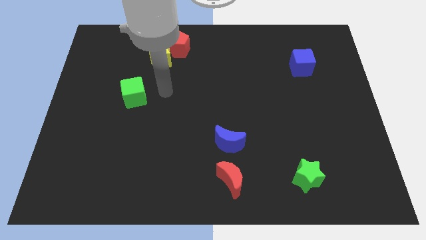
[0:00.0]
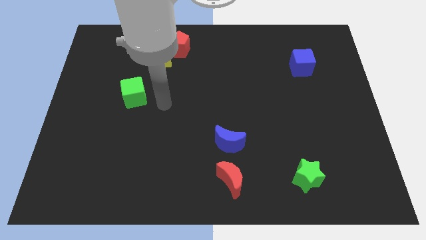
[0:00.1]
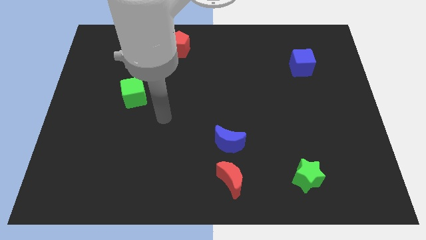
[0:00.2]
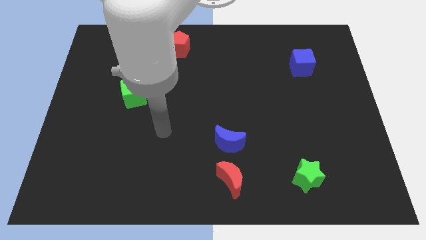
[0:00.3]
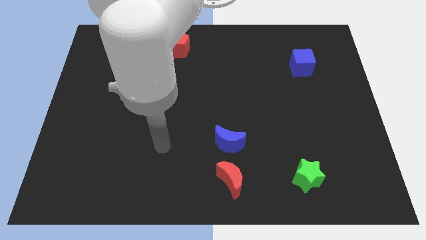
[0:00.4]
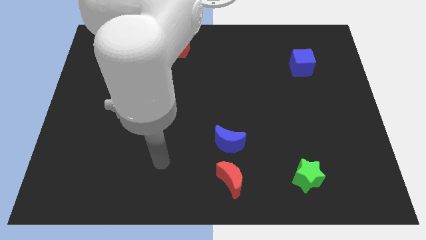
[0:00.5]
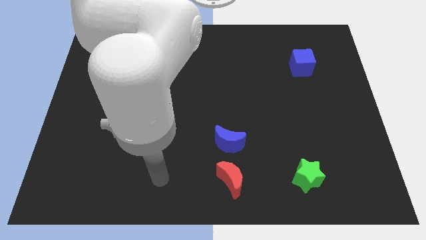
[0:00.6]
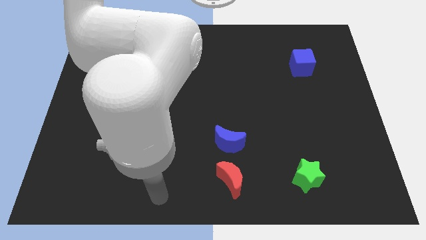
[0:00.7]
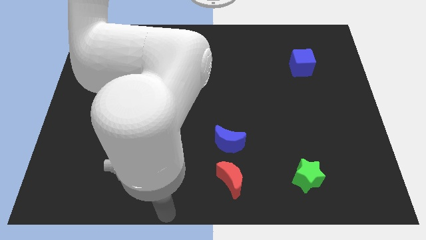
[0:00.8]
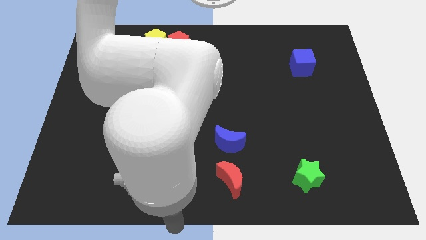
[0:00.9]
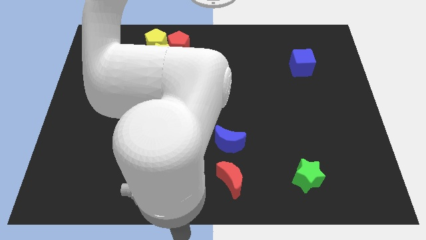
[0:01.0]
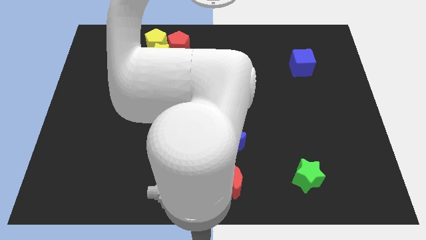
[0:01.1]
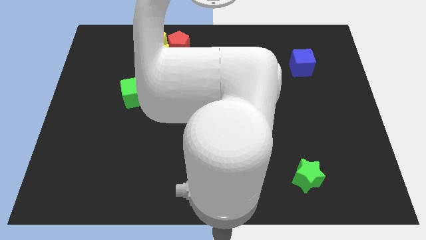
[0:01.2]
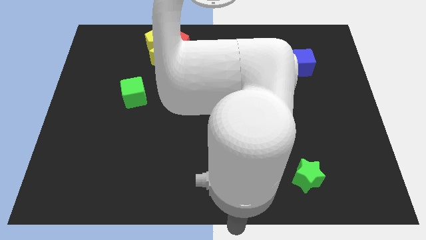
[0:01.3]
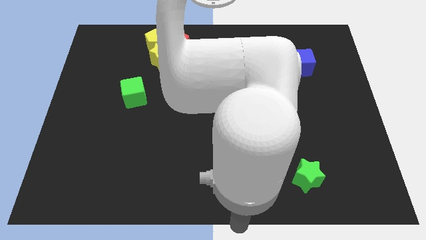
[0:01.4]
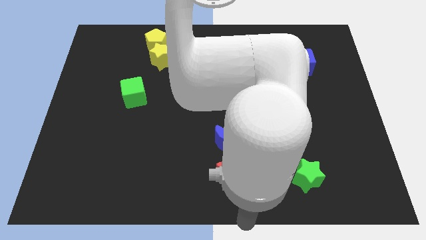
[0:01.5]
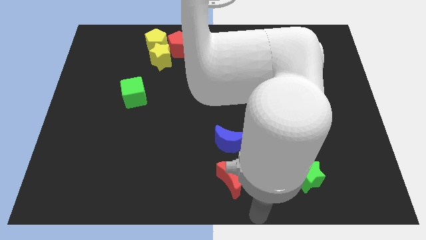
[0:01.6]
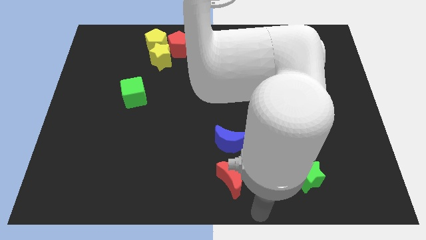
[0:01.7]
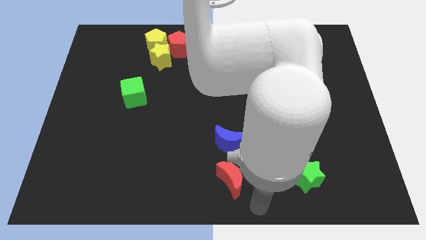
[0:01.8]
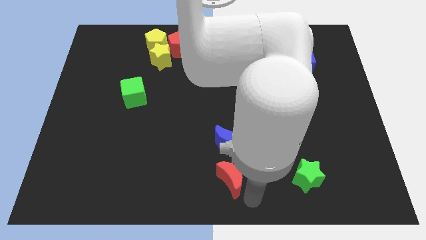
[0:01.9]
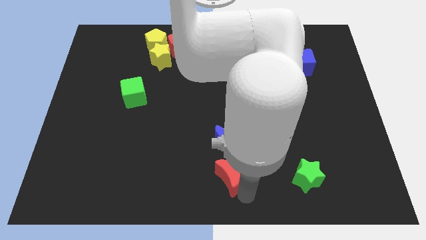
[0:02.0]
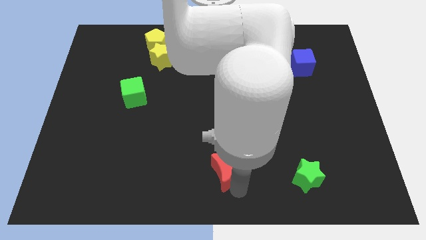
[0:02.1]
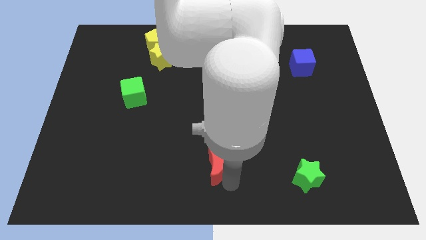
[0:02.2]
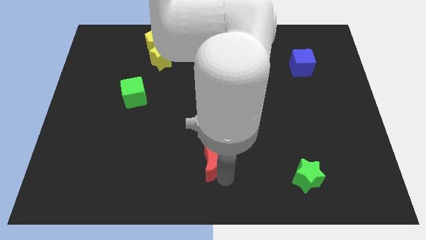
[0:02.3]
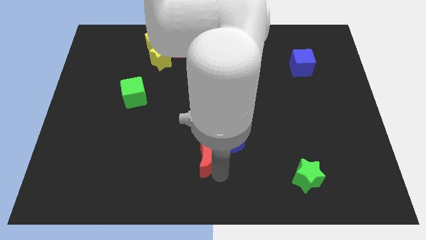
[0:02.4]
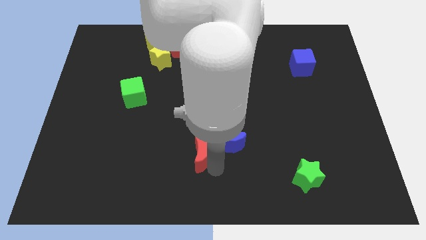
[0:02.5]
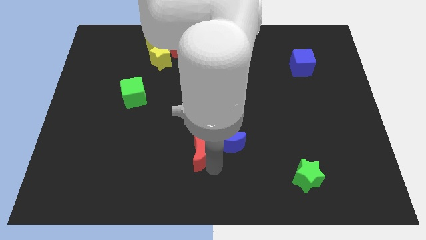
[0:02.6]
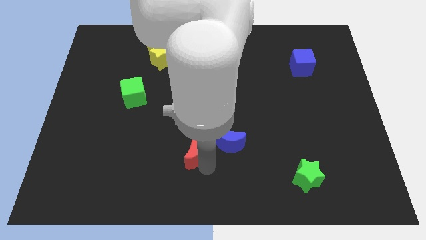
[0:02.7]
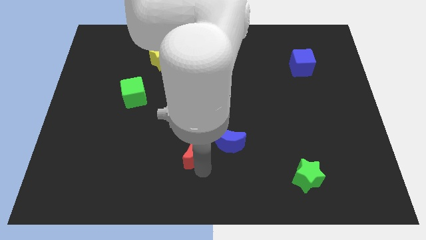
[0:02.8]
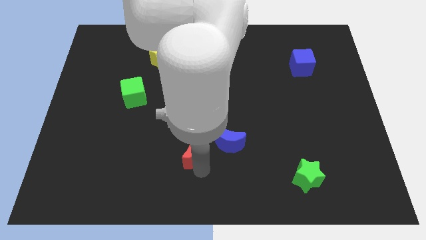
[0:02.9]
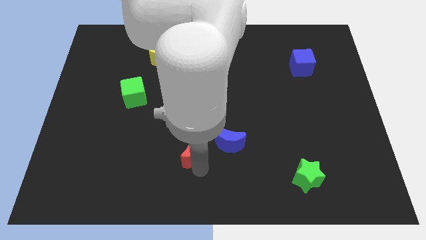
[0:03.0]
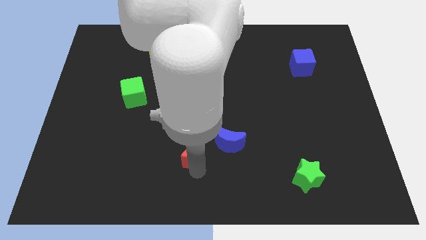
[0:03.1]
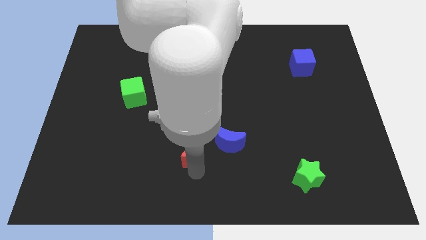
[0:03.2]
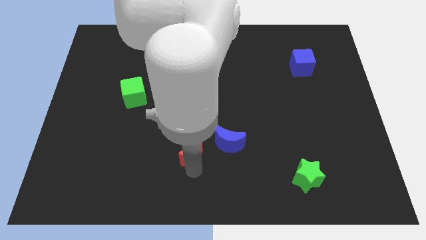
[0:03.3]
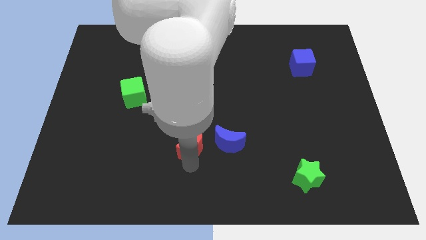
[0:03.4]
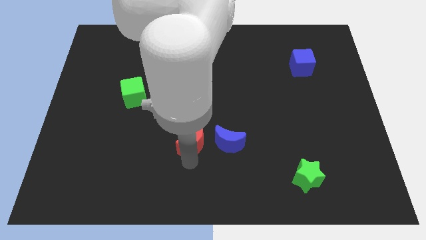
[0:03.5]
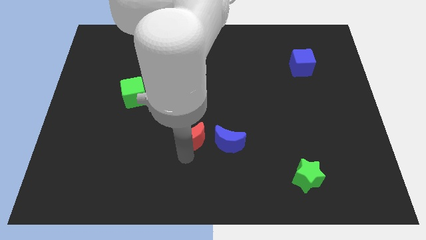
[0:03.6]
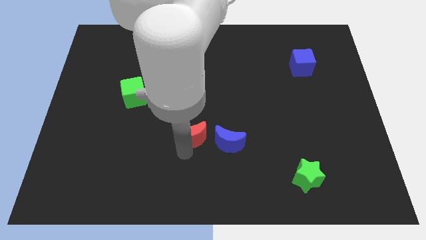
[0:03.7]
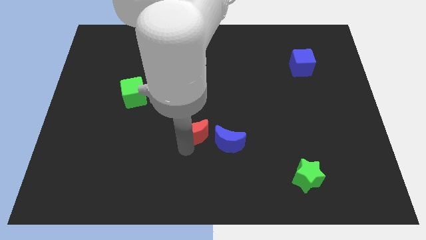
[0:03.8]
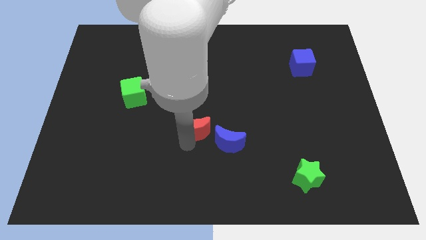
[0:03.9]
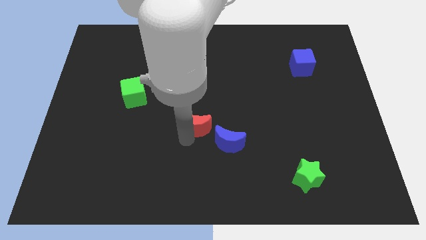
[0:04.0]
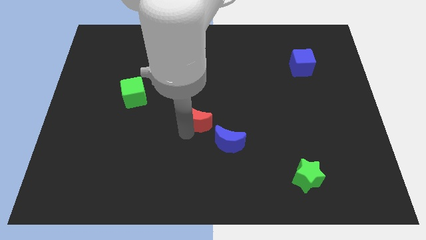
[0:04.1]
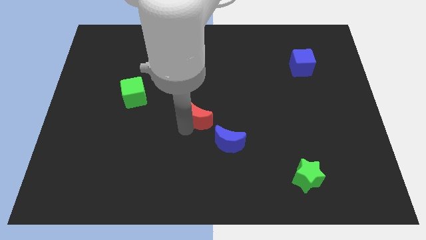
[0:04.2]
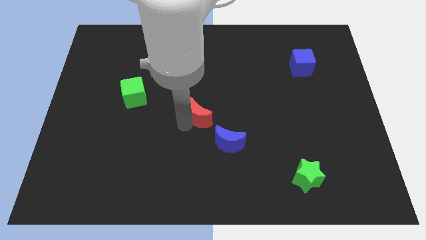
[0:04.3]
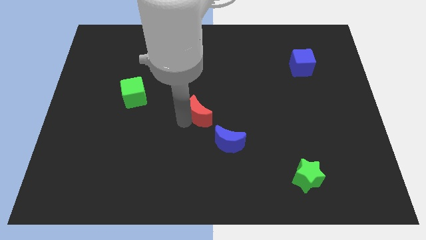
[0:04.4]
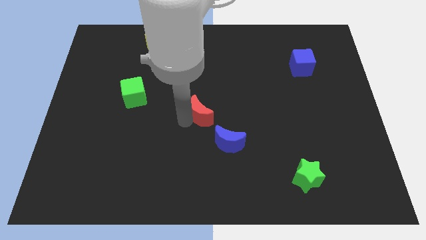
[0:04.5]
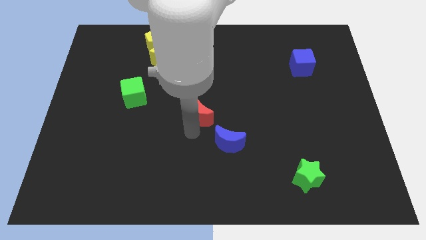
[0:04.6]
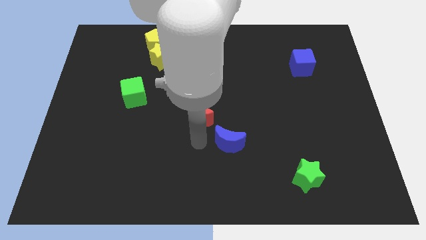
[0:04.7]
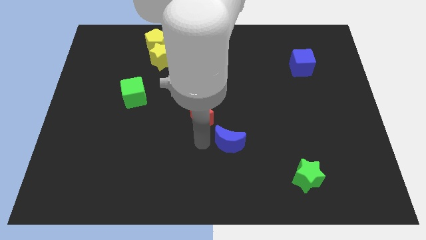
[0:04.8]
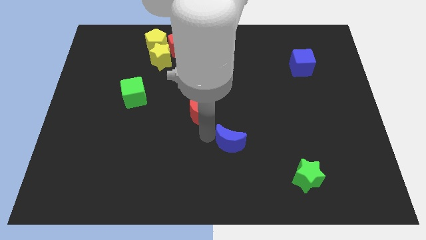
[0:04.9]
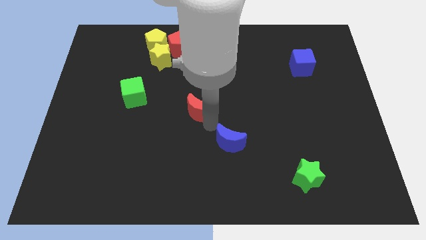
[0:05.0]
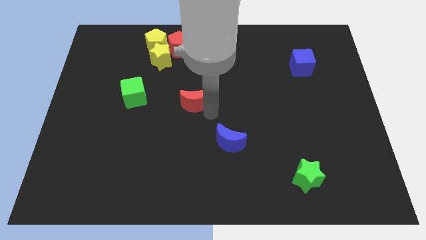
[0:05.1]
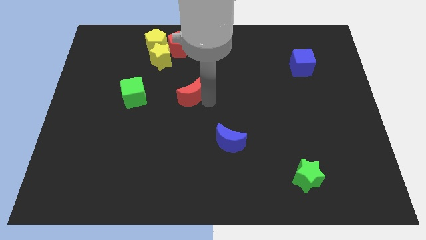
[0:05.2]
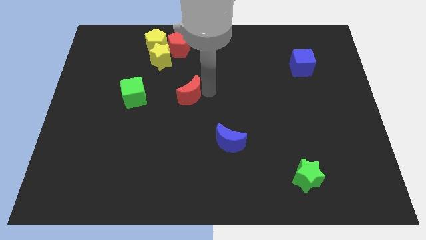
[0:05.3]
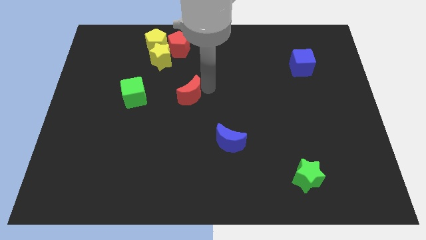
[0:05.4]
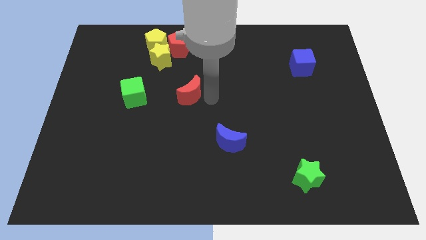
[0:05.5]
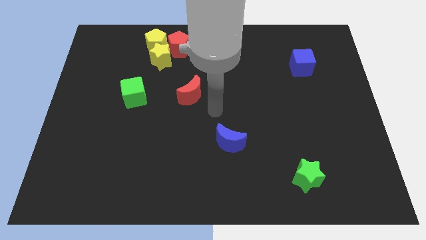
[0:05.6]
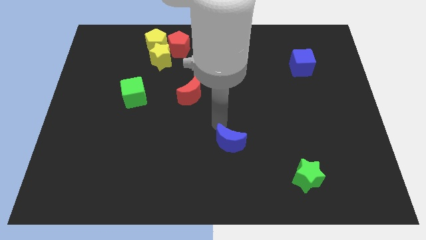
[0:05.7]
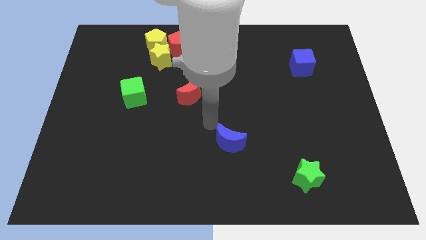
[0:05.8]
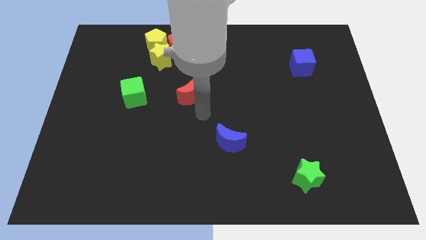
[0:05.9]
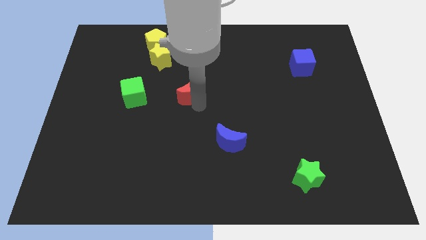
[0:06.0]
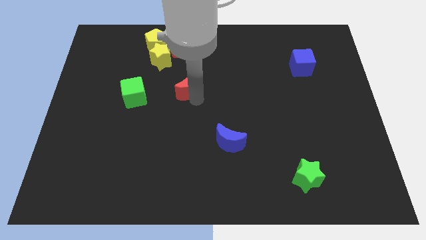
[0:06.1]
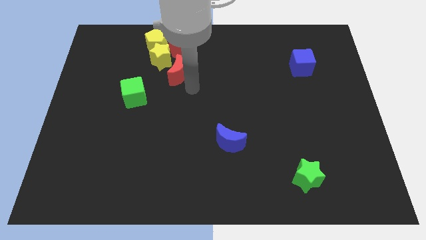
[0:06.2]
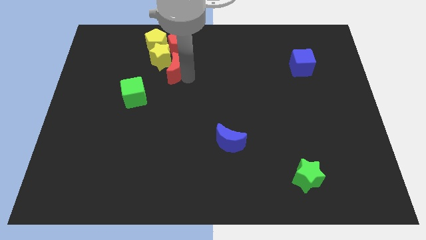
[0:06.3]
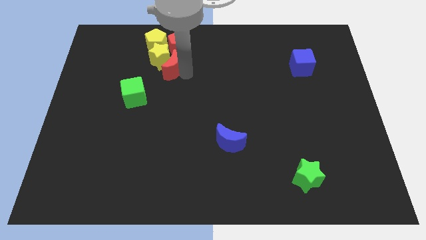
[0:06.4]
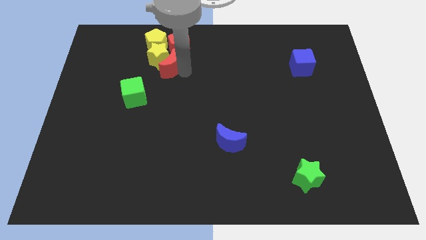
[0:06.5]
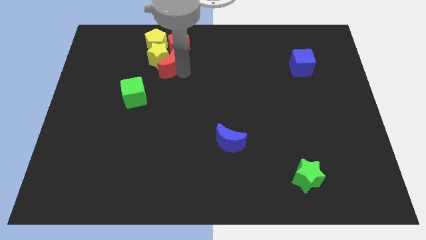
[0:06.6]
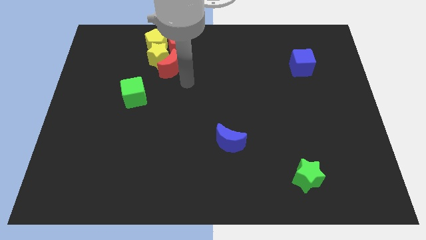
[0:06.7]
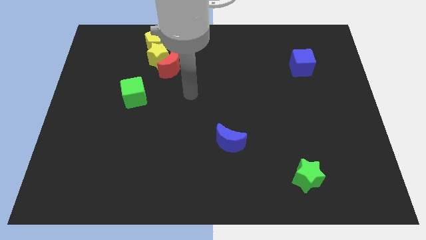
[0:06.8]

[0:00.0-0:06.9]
move the red crescent to the top of the board

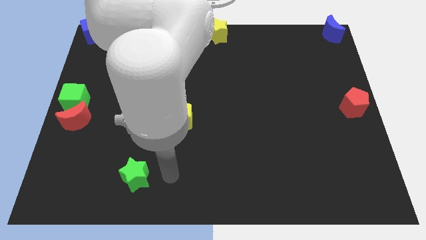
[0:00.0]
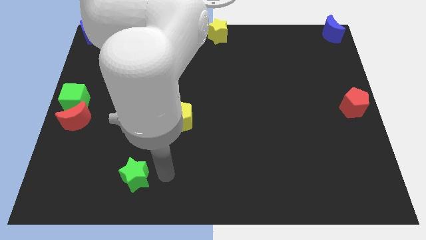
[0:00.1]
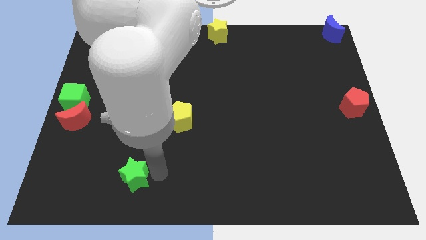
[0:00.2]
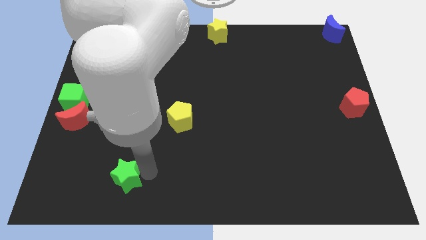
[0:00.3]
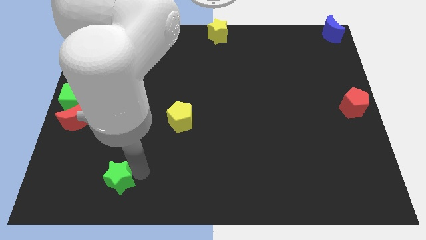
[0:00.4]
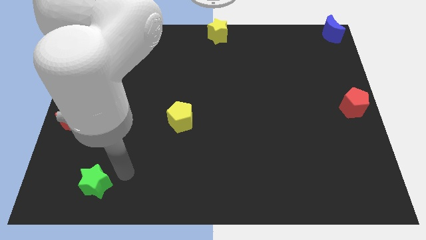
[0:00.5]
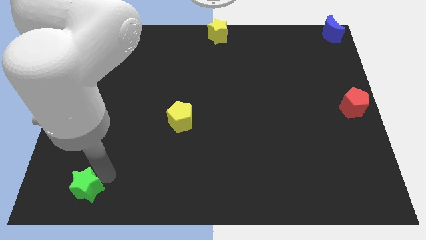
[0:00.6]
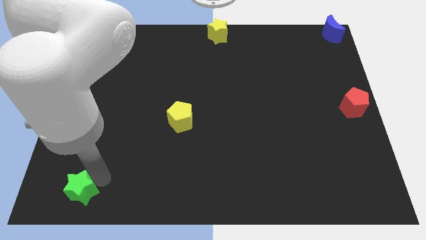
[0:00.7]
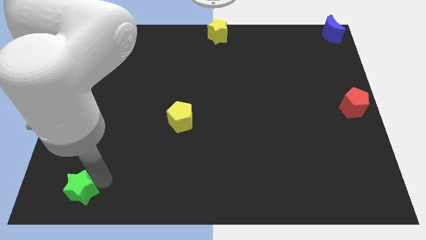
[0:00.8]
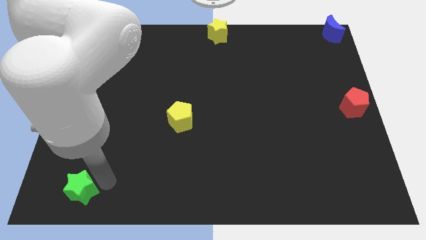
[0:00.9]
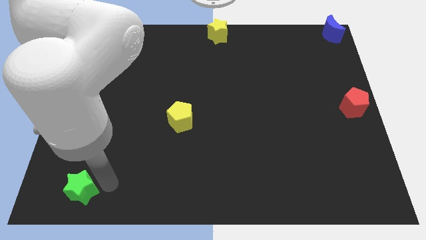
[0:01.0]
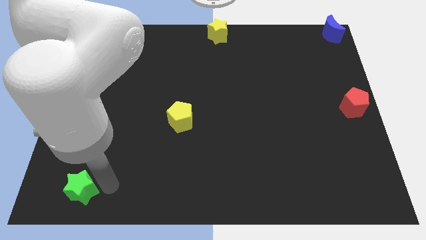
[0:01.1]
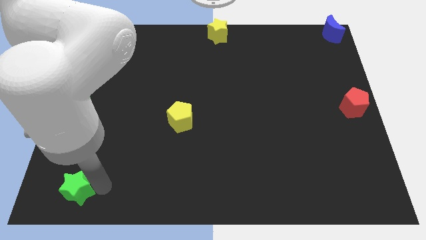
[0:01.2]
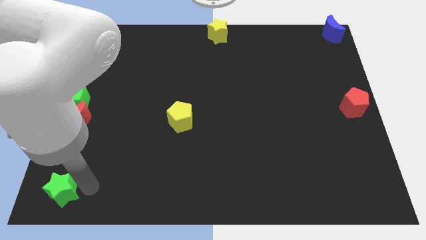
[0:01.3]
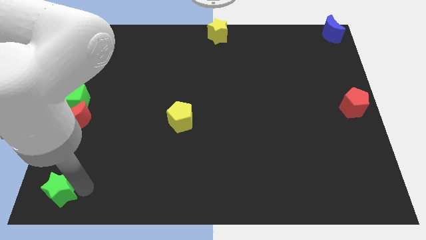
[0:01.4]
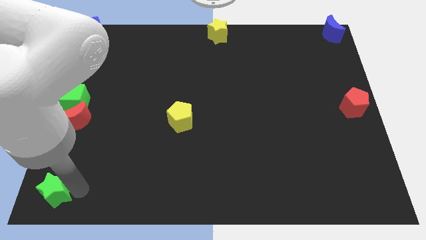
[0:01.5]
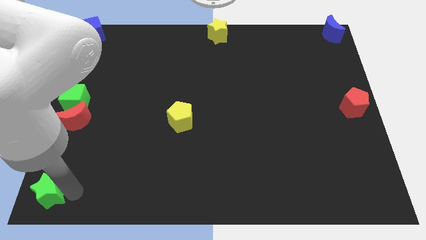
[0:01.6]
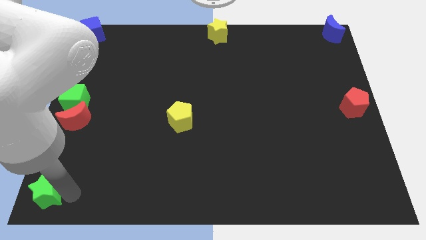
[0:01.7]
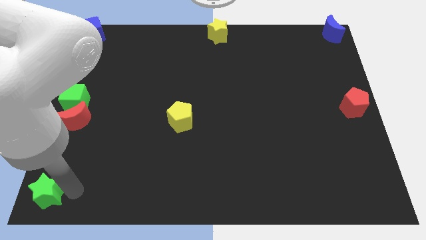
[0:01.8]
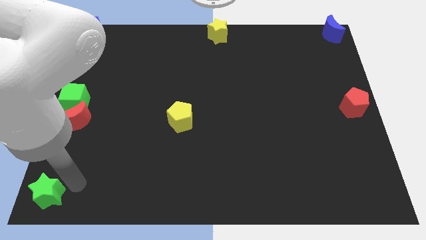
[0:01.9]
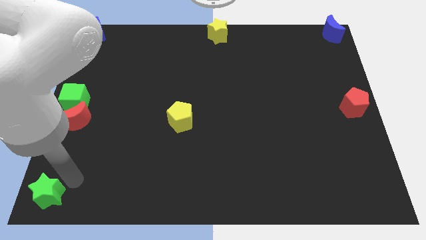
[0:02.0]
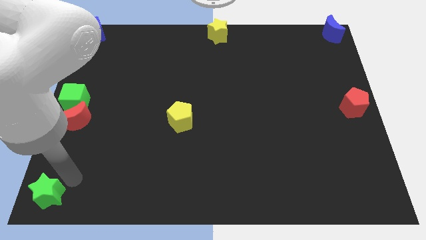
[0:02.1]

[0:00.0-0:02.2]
place the green star on the bottom left of the board
